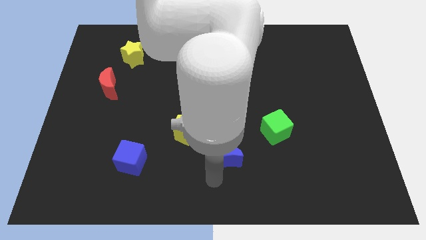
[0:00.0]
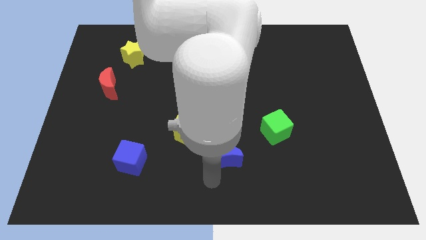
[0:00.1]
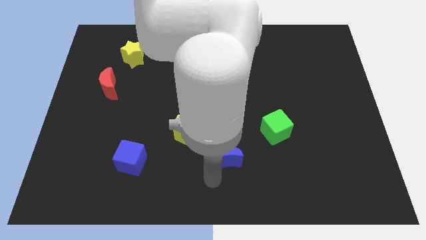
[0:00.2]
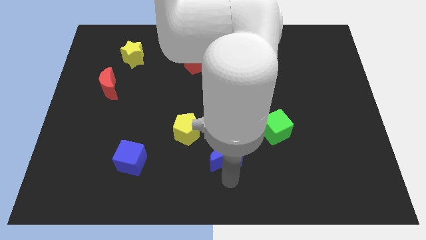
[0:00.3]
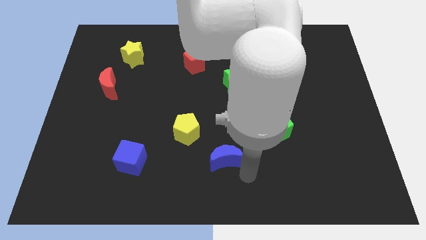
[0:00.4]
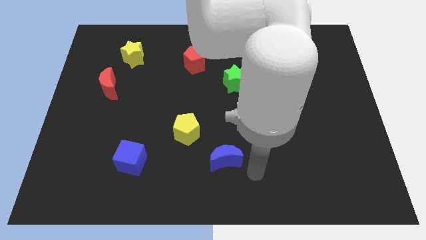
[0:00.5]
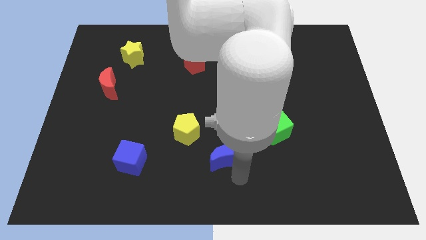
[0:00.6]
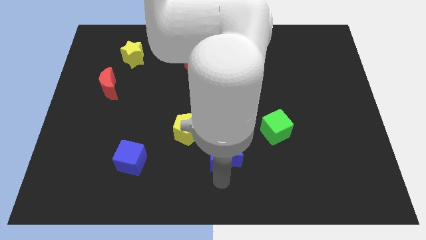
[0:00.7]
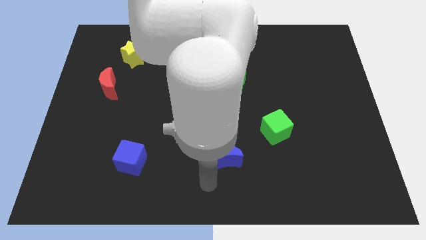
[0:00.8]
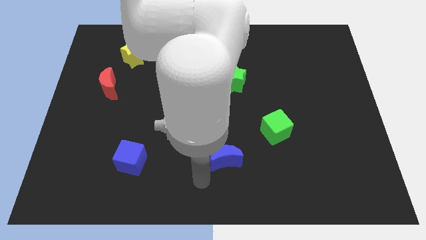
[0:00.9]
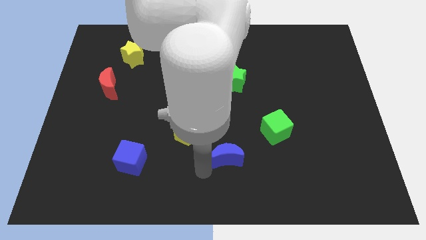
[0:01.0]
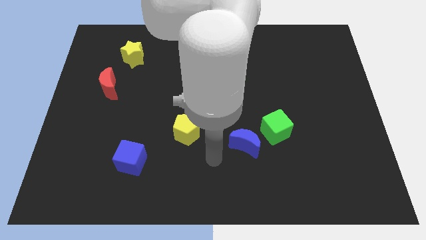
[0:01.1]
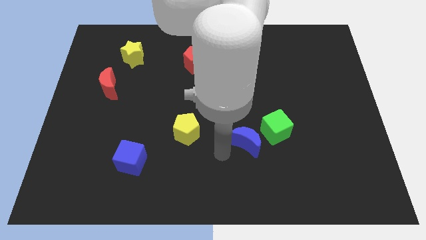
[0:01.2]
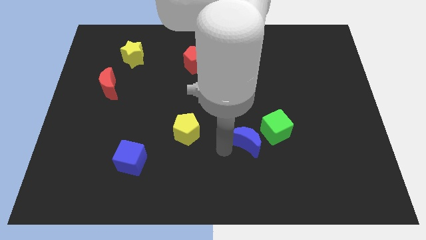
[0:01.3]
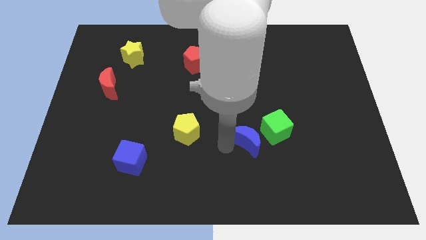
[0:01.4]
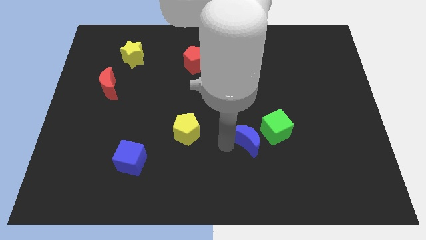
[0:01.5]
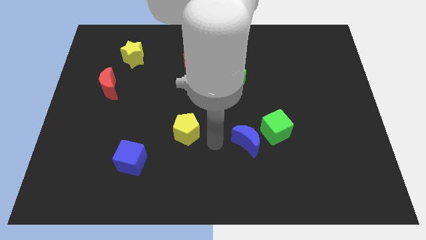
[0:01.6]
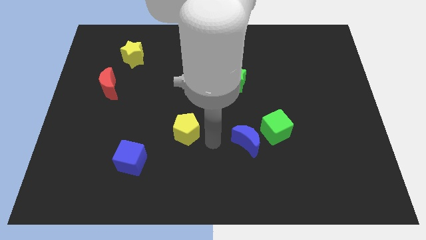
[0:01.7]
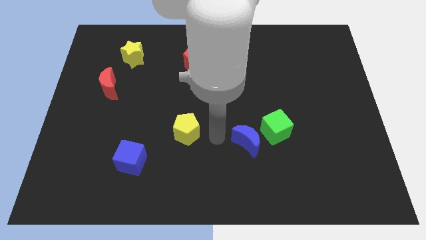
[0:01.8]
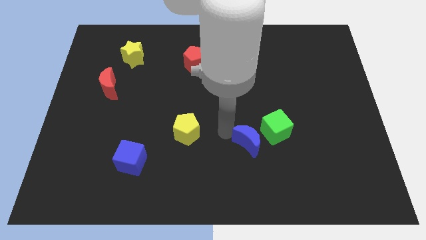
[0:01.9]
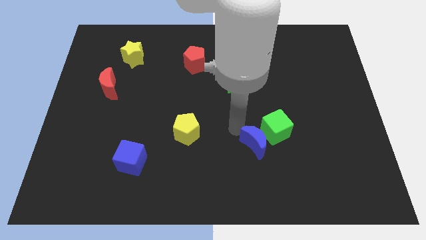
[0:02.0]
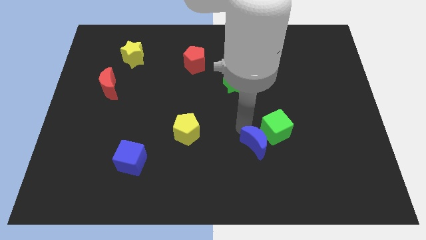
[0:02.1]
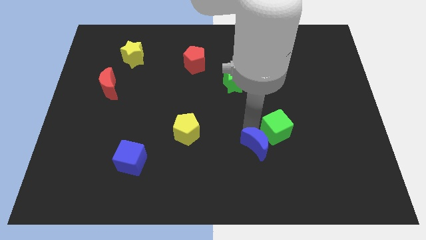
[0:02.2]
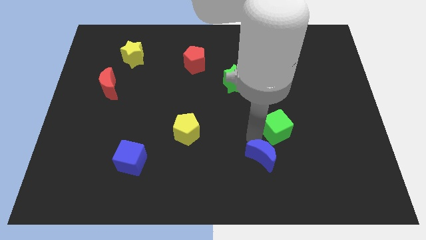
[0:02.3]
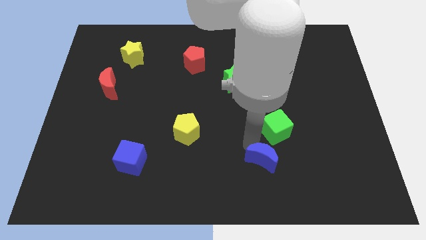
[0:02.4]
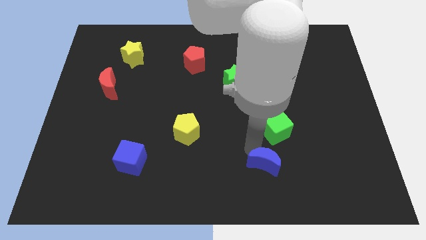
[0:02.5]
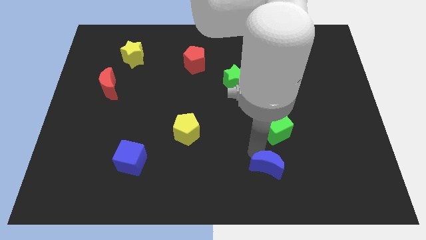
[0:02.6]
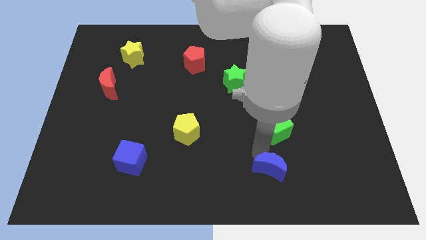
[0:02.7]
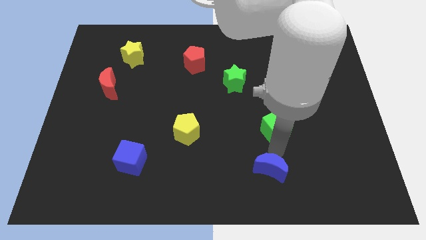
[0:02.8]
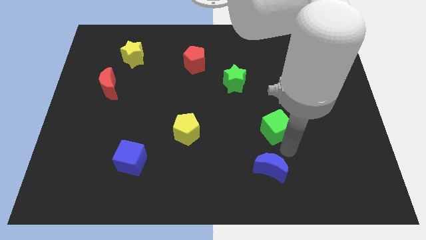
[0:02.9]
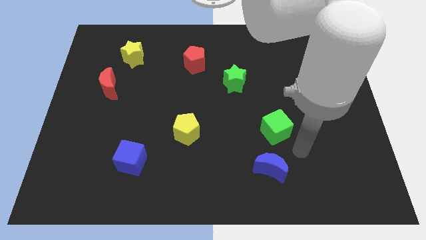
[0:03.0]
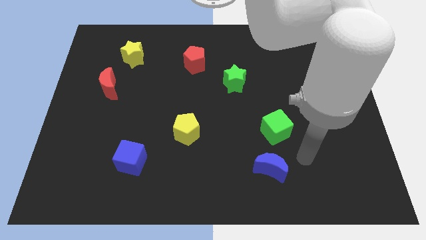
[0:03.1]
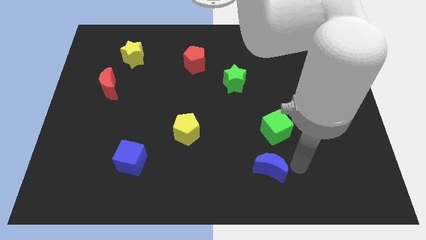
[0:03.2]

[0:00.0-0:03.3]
move the blue moon below the green cube

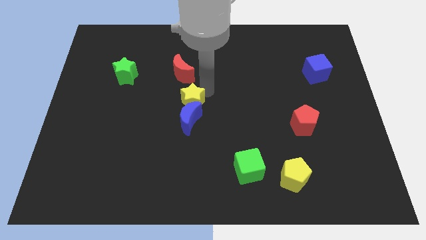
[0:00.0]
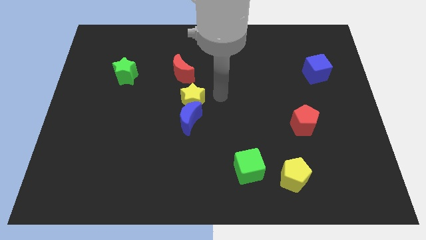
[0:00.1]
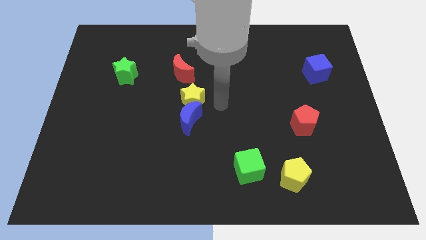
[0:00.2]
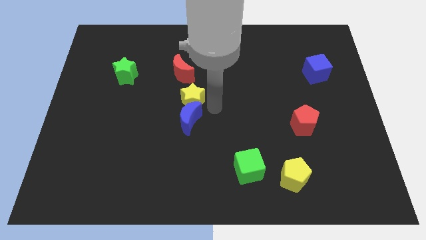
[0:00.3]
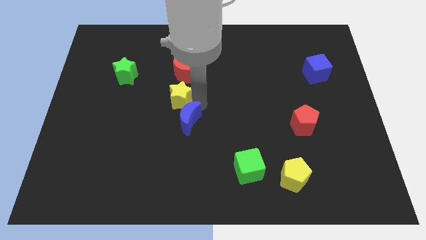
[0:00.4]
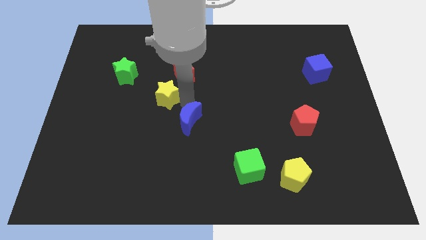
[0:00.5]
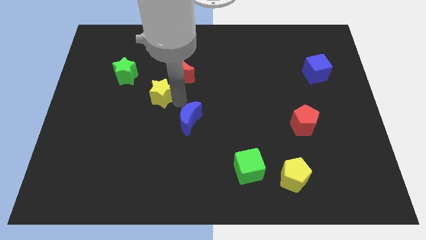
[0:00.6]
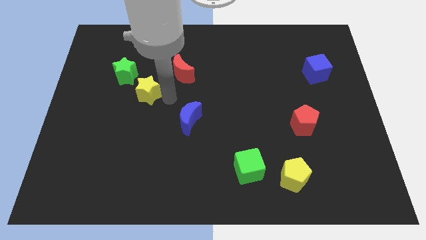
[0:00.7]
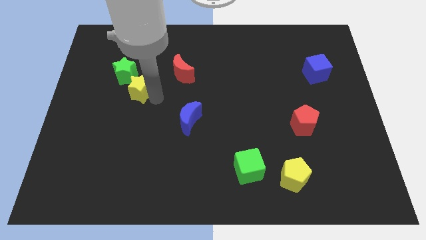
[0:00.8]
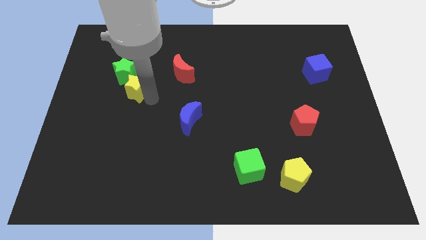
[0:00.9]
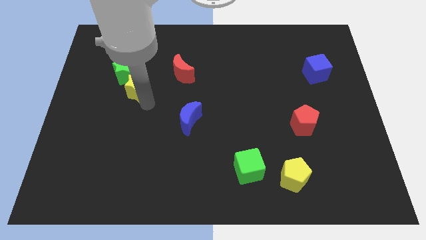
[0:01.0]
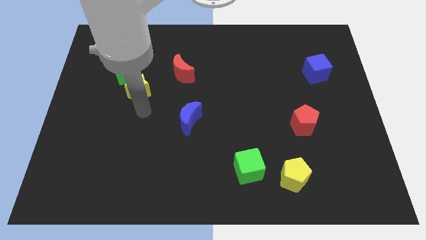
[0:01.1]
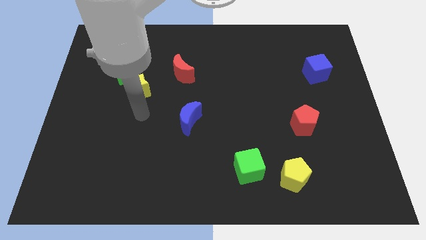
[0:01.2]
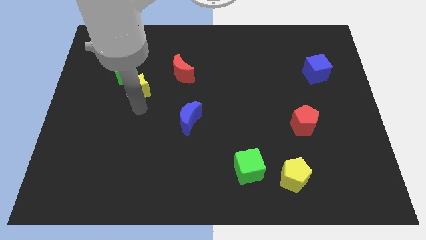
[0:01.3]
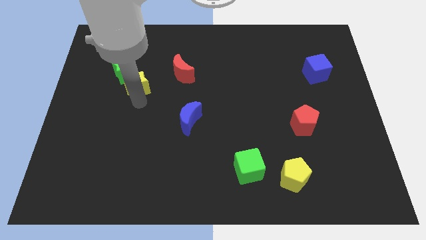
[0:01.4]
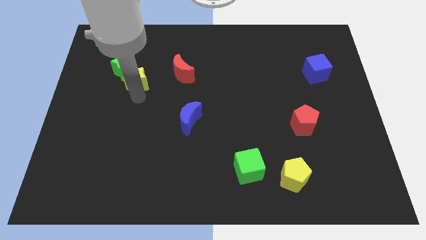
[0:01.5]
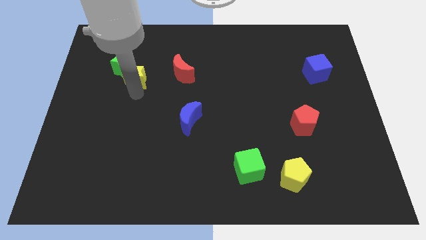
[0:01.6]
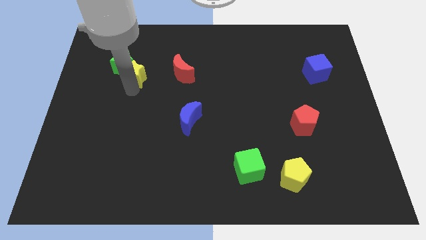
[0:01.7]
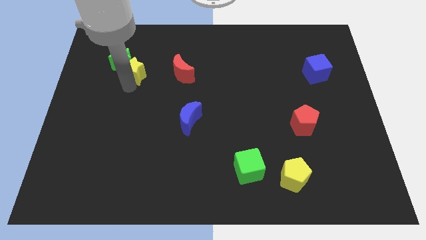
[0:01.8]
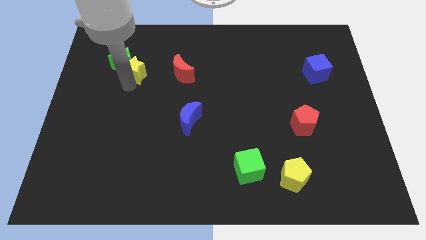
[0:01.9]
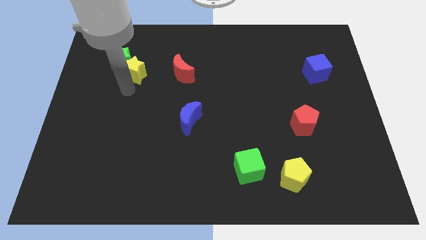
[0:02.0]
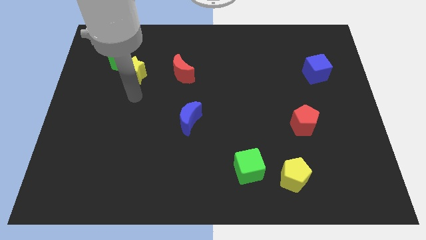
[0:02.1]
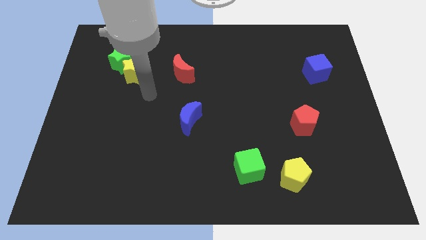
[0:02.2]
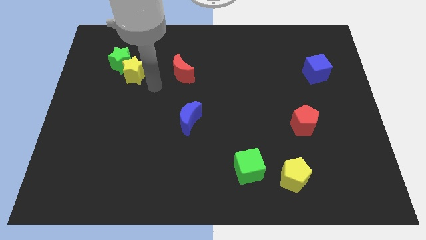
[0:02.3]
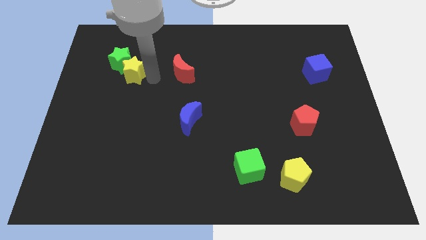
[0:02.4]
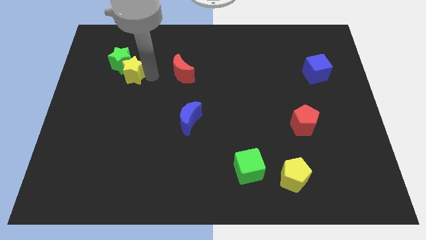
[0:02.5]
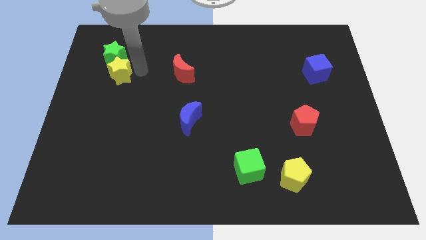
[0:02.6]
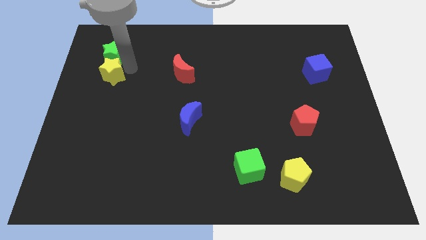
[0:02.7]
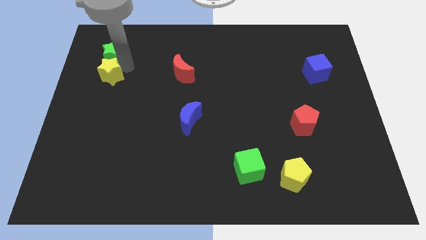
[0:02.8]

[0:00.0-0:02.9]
place yellow star towards top left

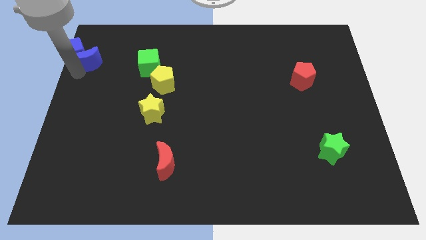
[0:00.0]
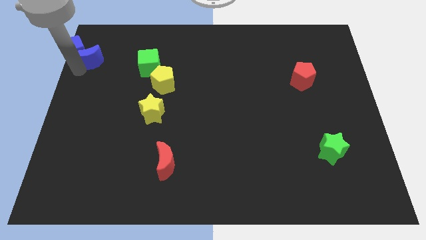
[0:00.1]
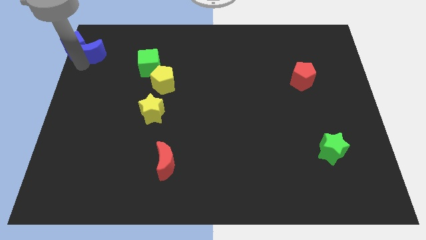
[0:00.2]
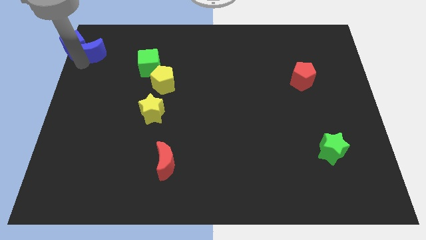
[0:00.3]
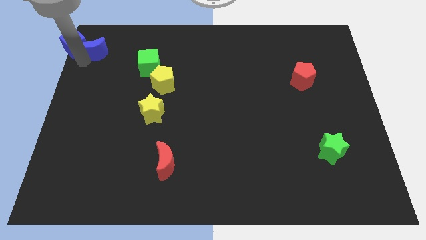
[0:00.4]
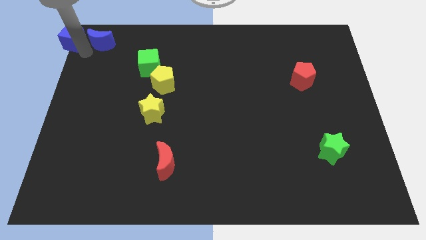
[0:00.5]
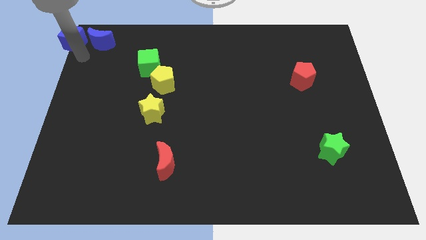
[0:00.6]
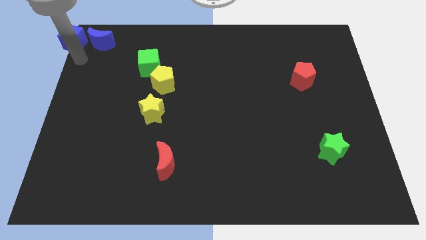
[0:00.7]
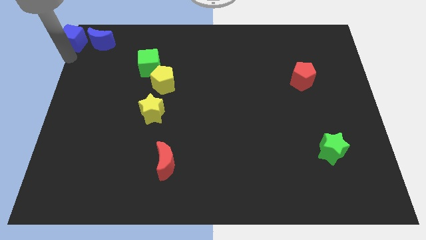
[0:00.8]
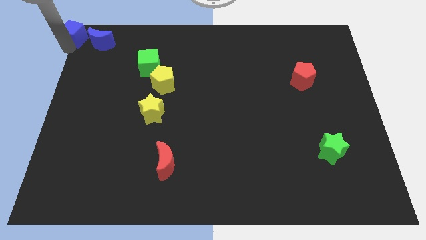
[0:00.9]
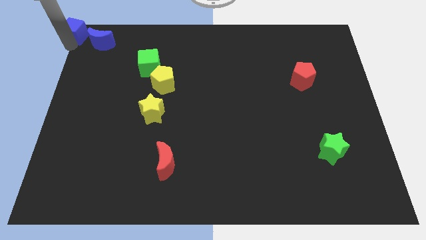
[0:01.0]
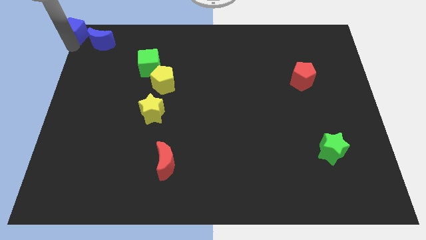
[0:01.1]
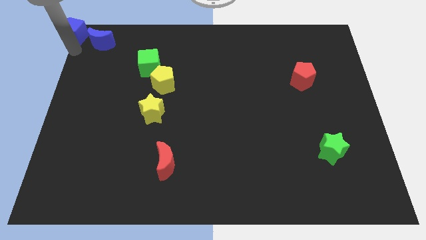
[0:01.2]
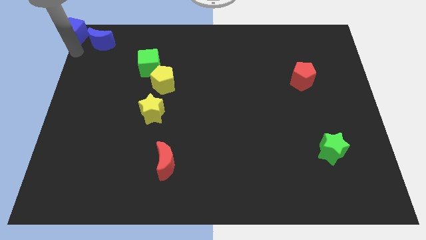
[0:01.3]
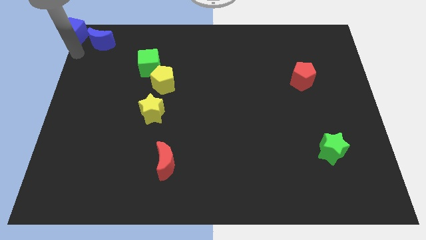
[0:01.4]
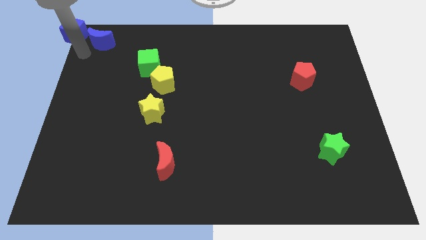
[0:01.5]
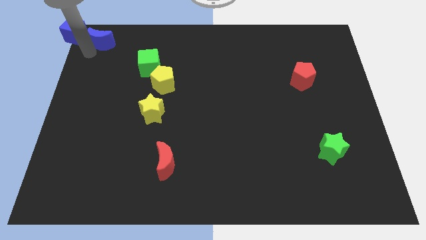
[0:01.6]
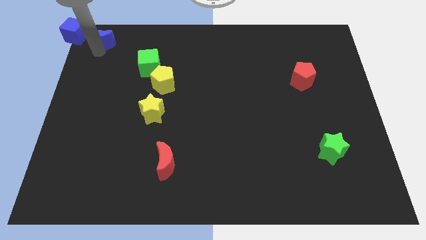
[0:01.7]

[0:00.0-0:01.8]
separate the blue crescent from the blue cube

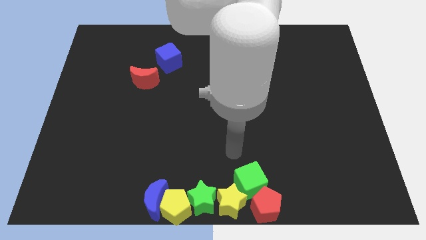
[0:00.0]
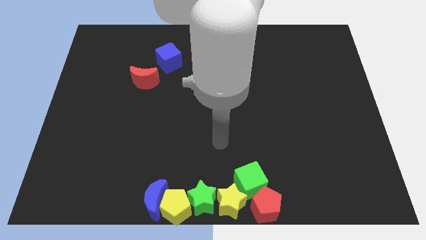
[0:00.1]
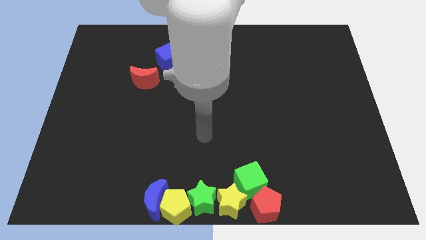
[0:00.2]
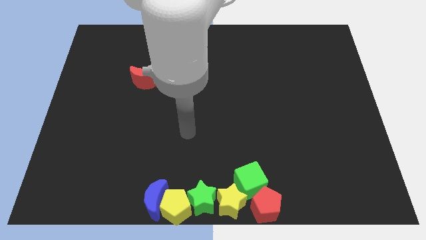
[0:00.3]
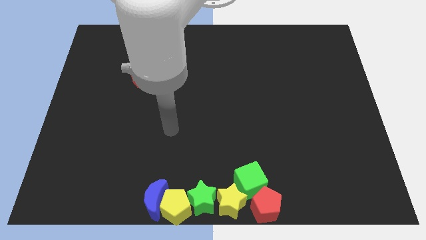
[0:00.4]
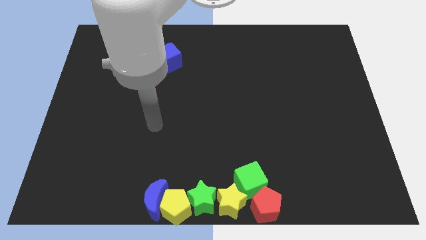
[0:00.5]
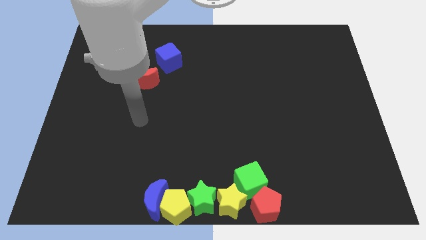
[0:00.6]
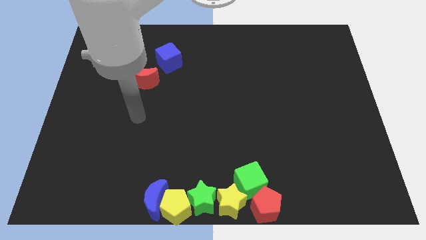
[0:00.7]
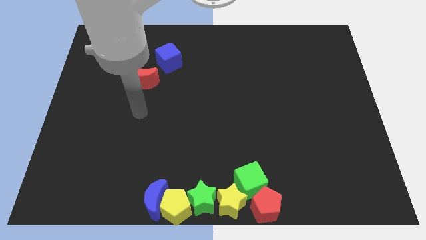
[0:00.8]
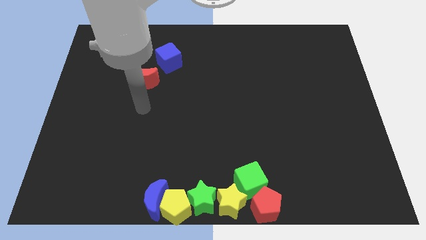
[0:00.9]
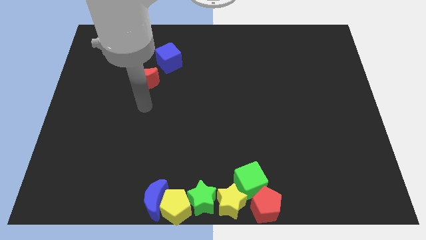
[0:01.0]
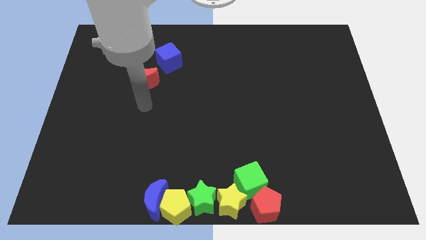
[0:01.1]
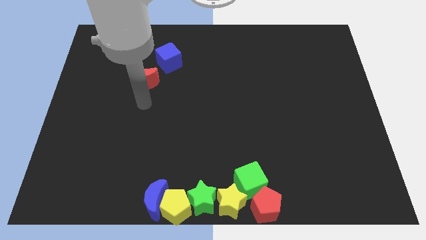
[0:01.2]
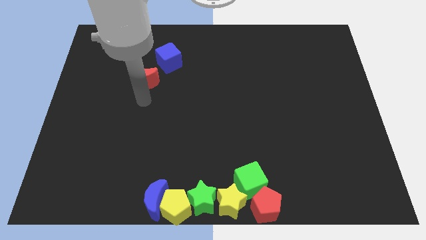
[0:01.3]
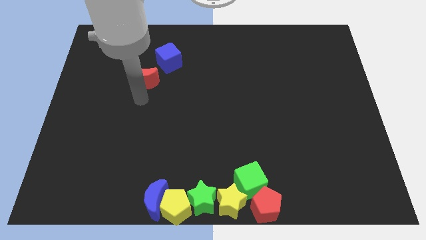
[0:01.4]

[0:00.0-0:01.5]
move the arm away from the green cube
